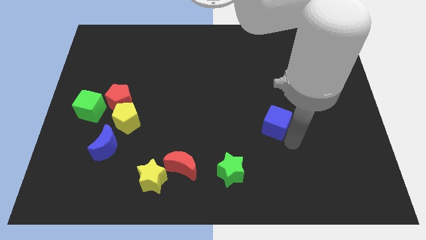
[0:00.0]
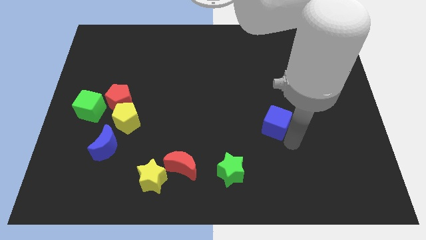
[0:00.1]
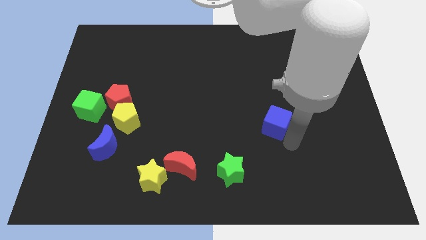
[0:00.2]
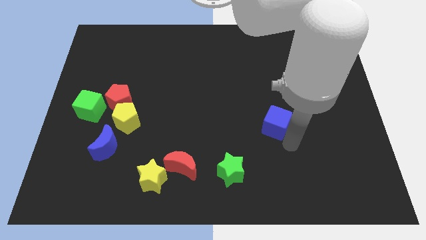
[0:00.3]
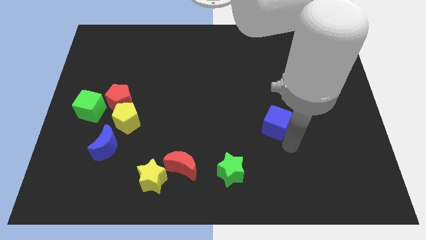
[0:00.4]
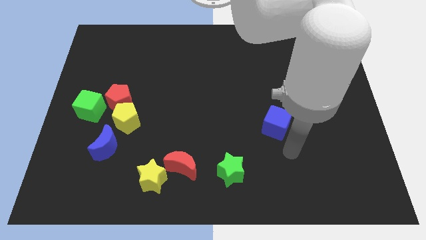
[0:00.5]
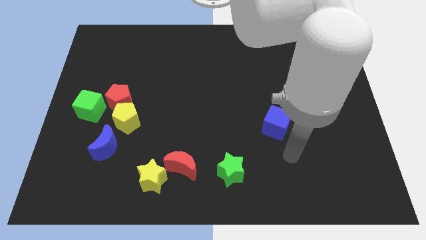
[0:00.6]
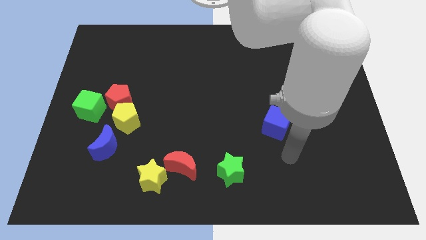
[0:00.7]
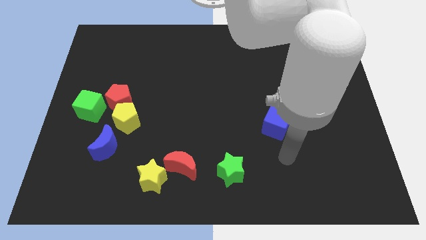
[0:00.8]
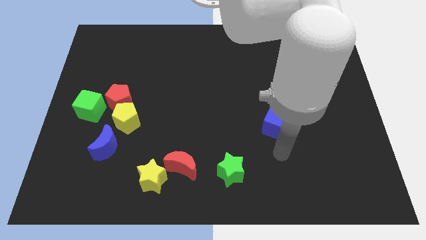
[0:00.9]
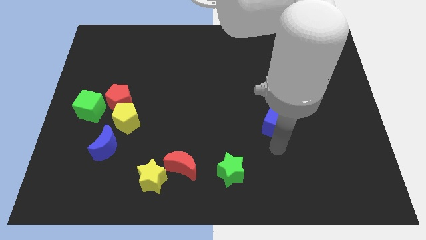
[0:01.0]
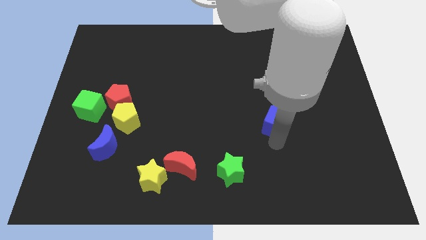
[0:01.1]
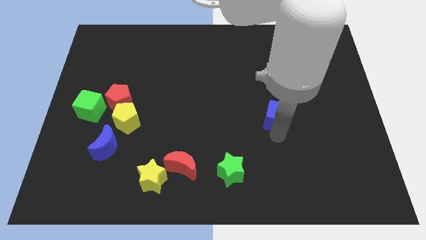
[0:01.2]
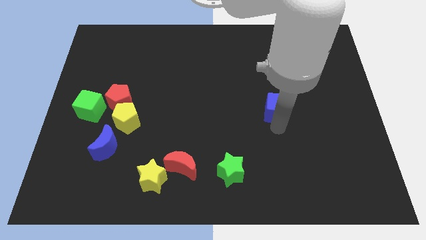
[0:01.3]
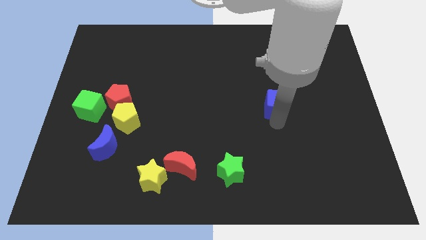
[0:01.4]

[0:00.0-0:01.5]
move the blue cube slightly to the top of the board

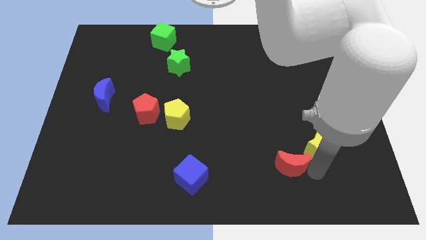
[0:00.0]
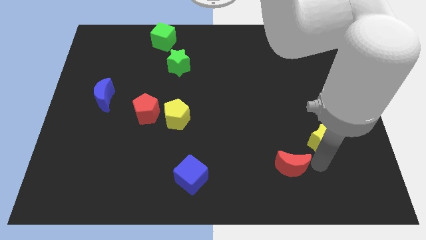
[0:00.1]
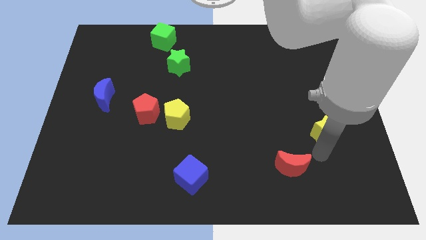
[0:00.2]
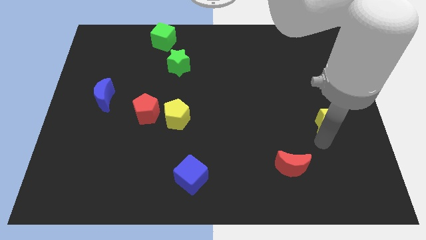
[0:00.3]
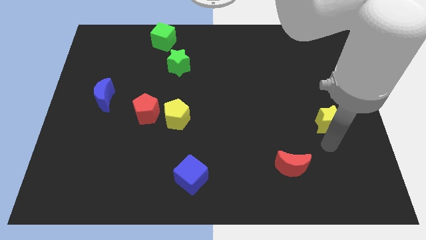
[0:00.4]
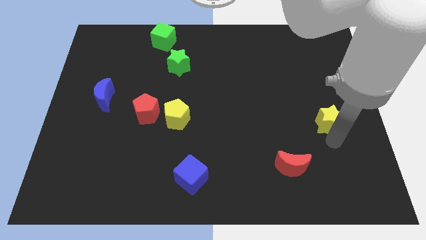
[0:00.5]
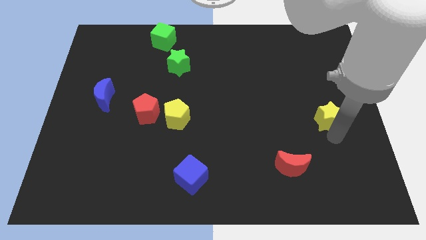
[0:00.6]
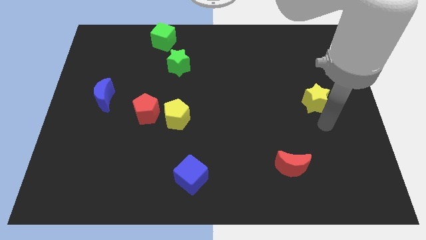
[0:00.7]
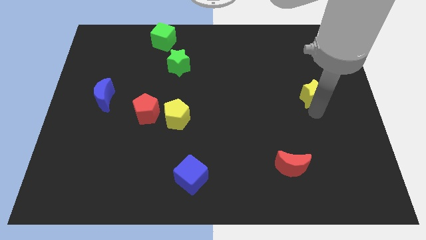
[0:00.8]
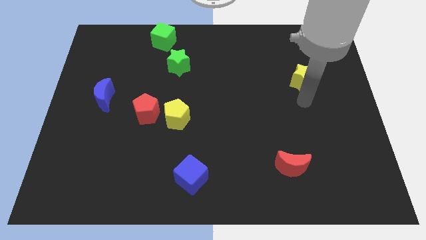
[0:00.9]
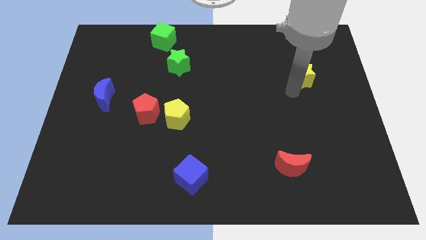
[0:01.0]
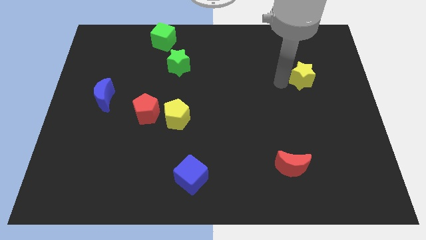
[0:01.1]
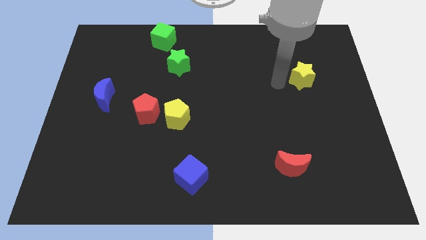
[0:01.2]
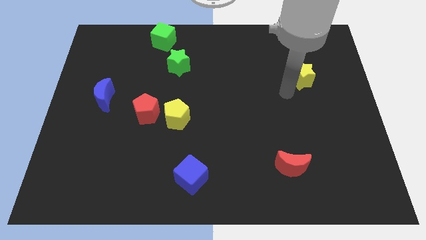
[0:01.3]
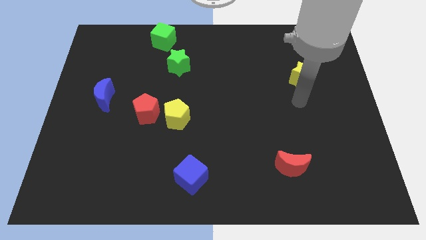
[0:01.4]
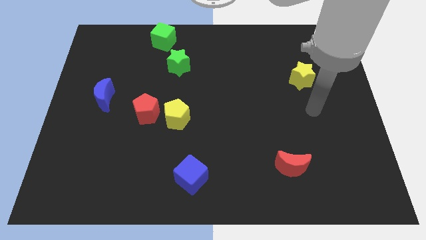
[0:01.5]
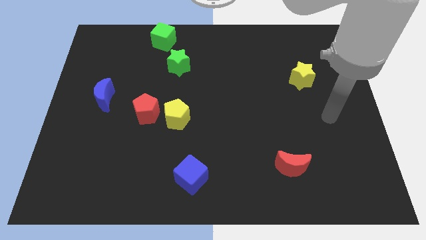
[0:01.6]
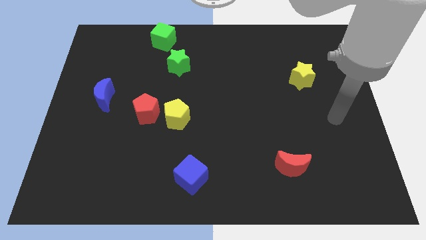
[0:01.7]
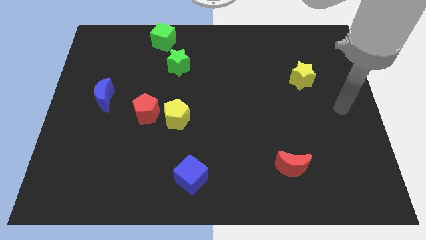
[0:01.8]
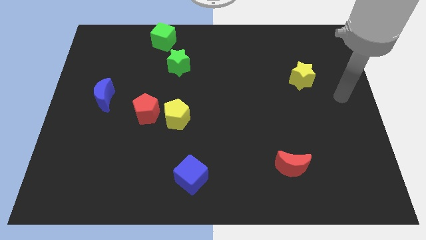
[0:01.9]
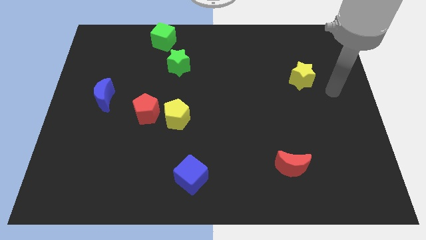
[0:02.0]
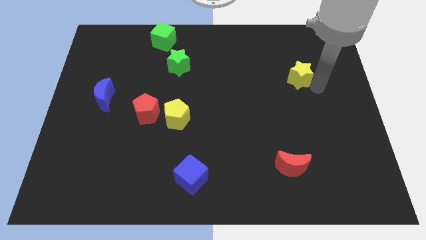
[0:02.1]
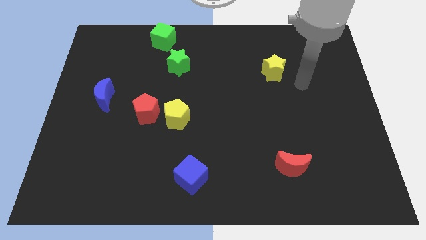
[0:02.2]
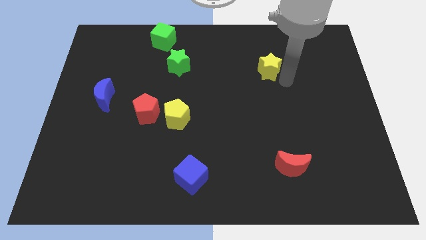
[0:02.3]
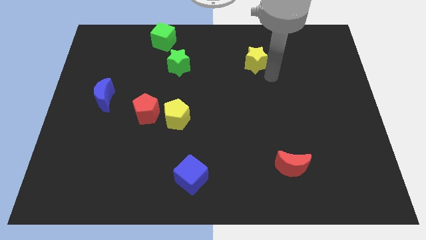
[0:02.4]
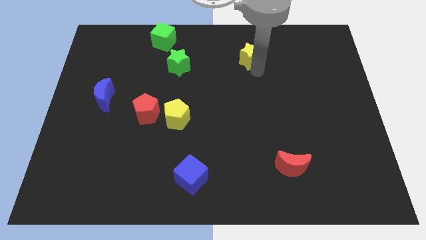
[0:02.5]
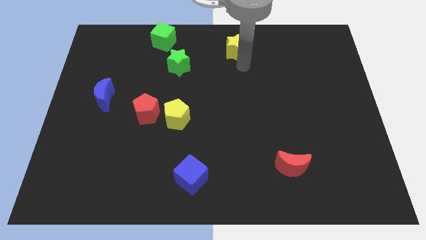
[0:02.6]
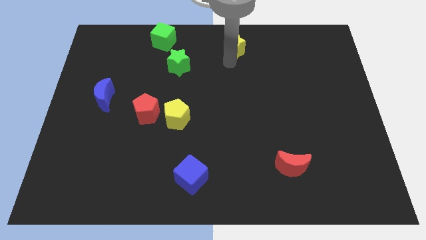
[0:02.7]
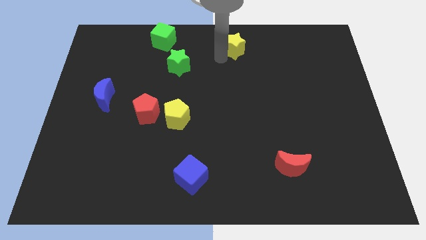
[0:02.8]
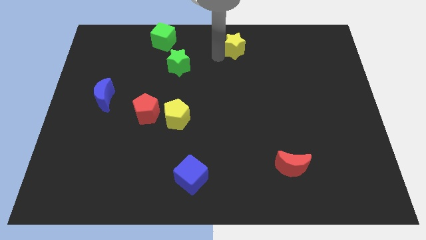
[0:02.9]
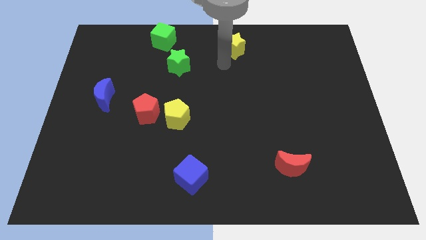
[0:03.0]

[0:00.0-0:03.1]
push the yellow star to the top side of the board

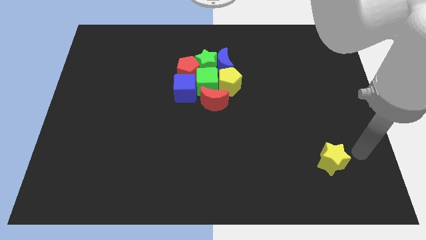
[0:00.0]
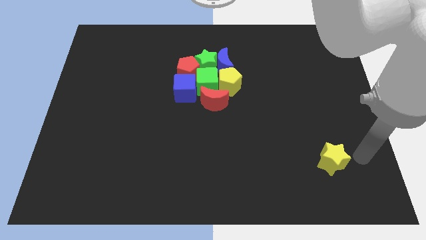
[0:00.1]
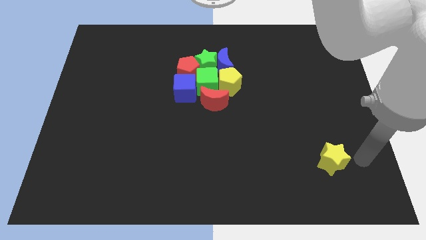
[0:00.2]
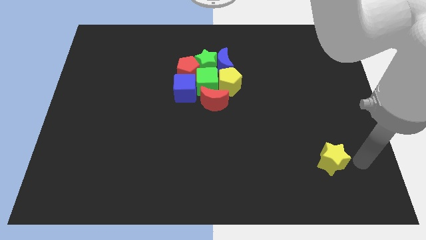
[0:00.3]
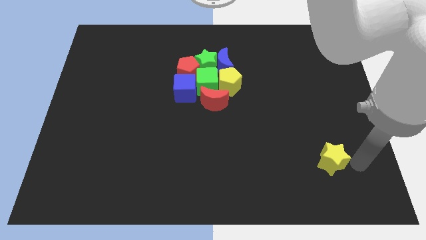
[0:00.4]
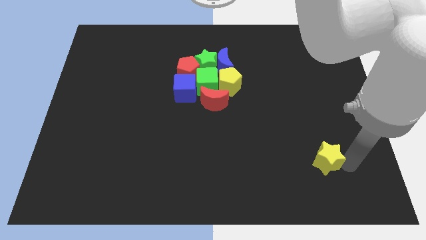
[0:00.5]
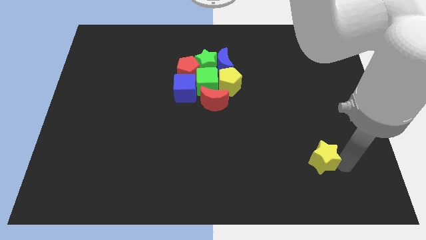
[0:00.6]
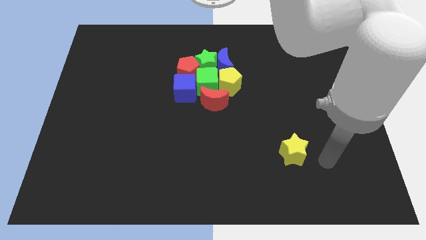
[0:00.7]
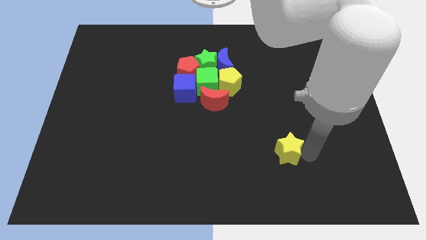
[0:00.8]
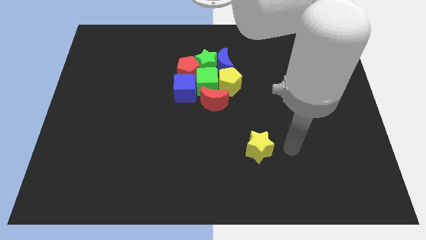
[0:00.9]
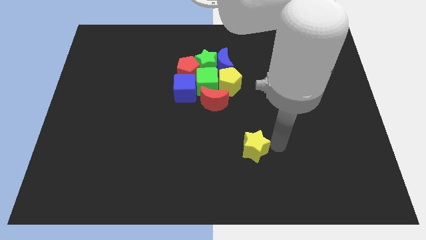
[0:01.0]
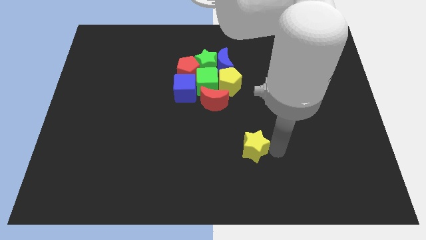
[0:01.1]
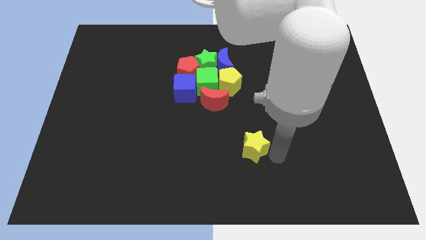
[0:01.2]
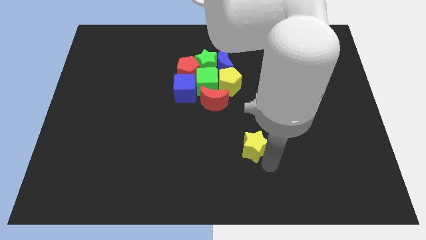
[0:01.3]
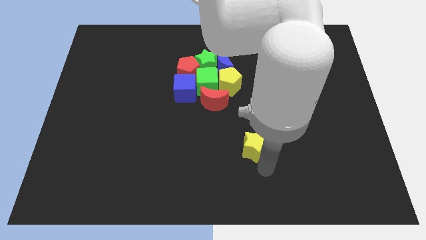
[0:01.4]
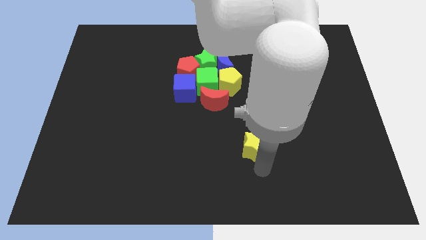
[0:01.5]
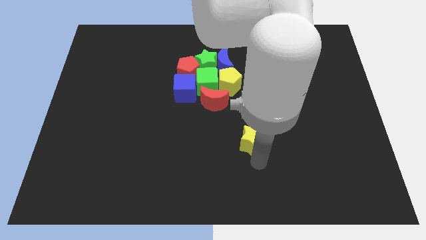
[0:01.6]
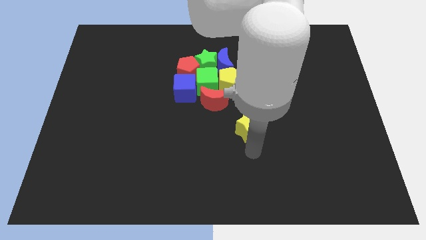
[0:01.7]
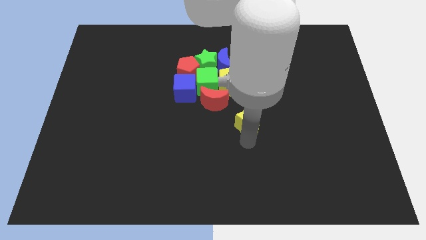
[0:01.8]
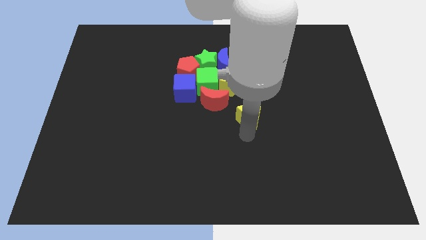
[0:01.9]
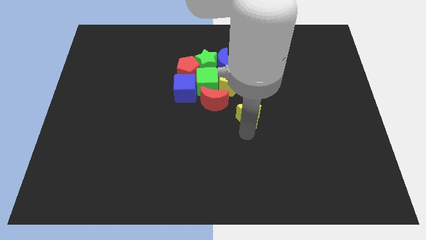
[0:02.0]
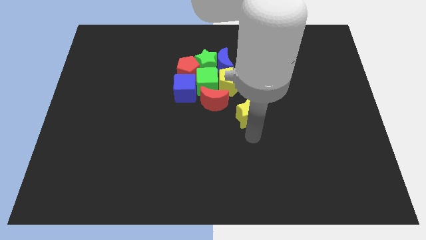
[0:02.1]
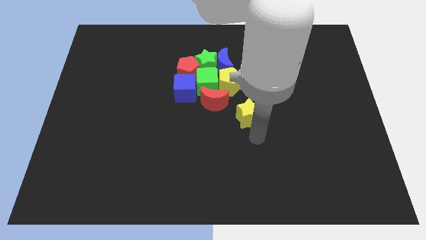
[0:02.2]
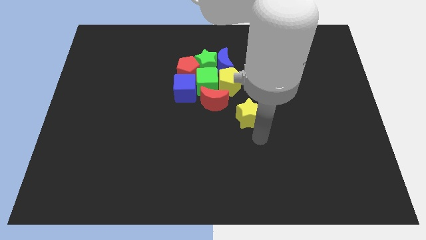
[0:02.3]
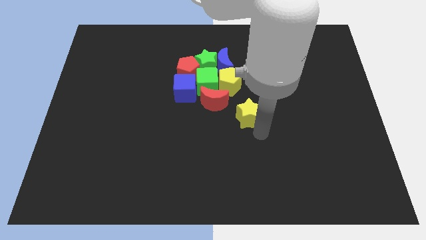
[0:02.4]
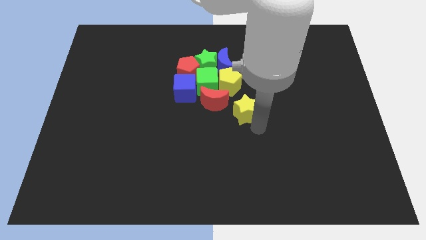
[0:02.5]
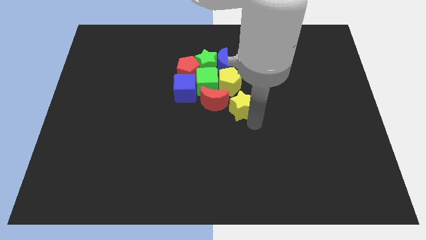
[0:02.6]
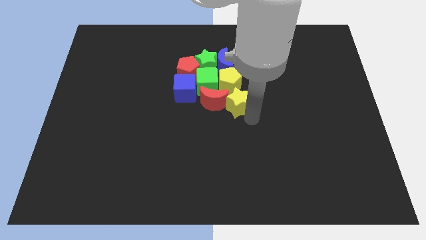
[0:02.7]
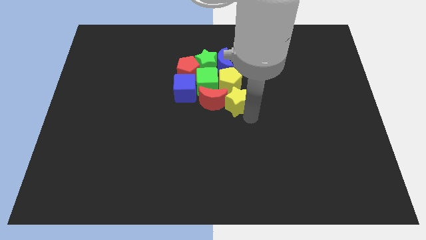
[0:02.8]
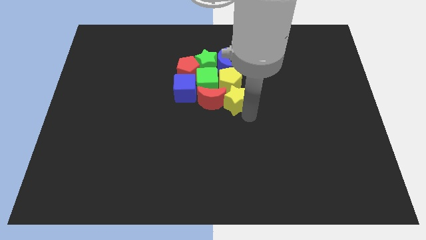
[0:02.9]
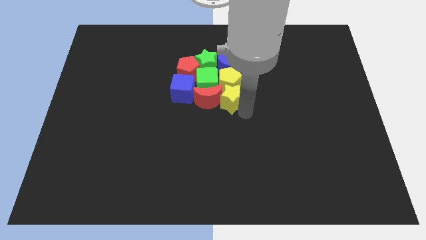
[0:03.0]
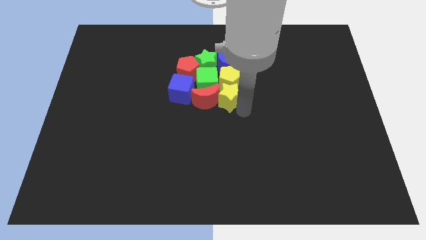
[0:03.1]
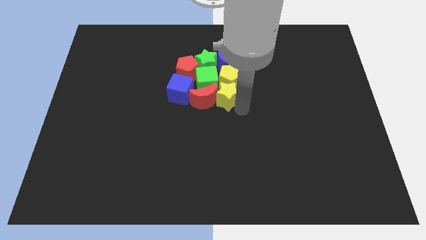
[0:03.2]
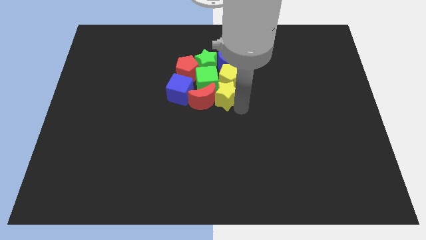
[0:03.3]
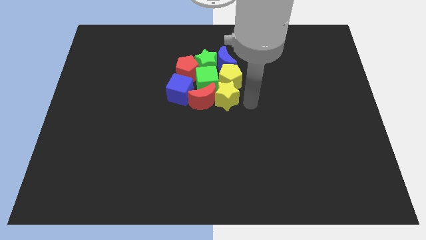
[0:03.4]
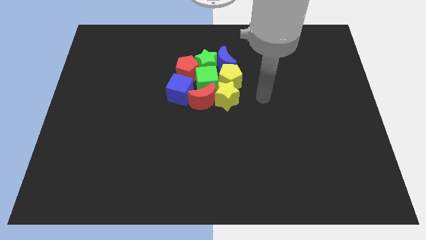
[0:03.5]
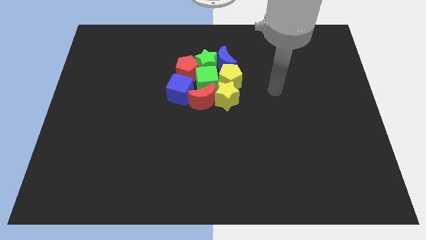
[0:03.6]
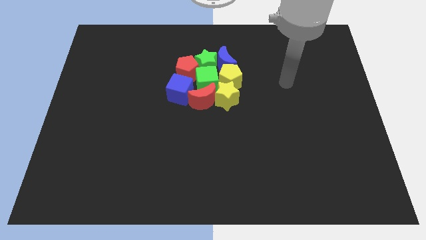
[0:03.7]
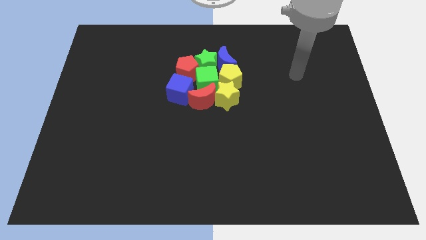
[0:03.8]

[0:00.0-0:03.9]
push the yellow star into the bottom right of the red crescent

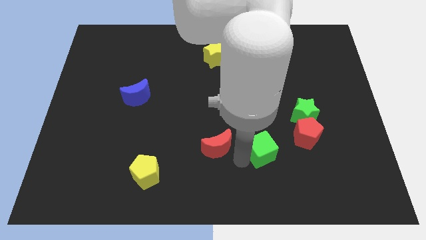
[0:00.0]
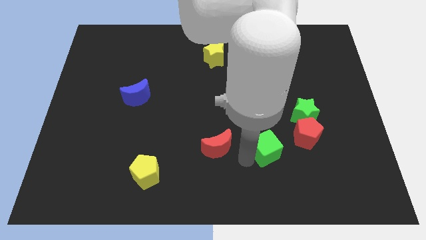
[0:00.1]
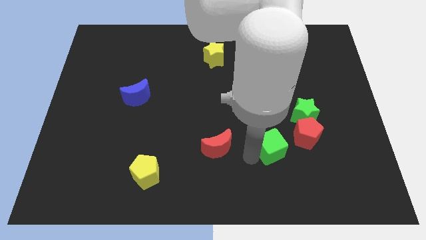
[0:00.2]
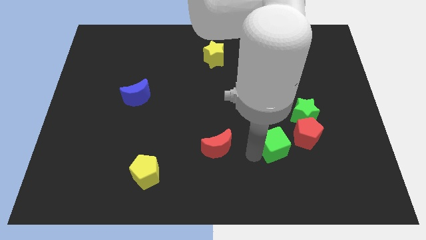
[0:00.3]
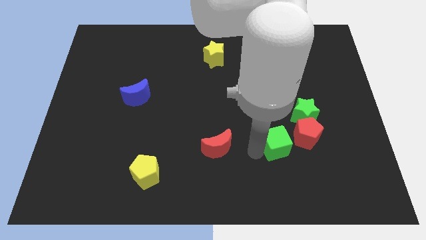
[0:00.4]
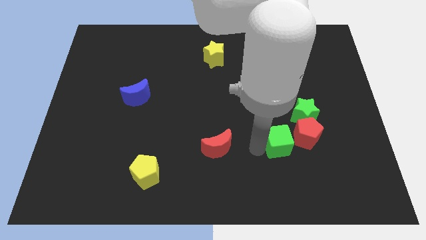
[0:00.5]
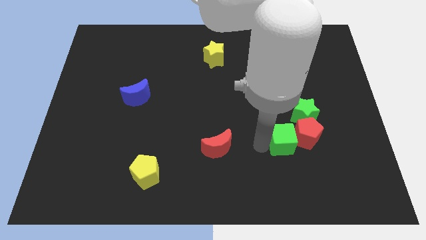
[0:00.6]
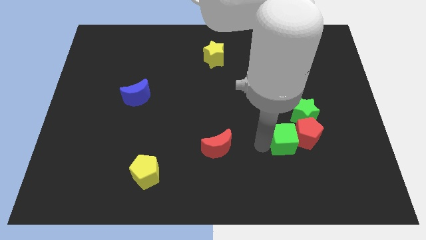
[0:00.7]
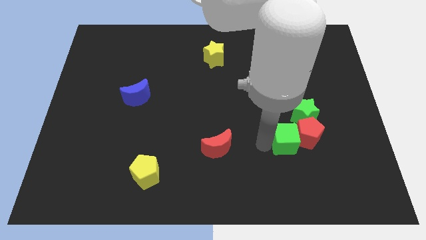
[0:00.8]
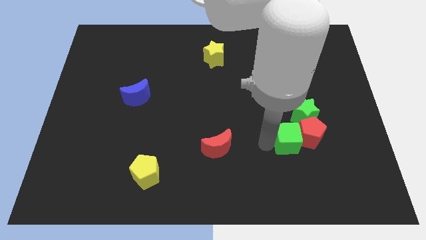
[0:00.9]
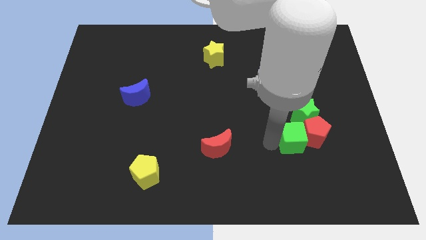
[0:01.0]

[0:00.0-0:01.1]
move green cube in to red pentagon
